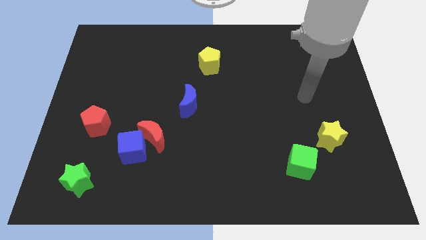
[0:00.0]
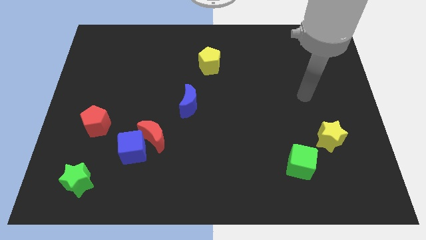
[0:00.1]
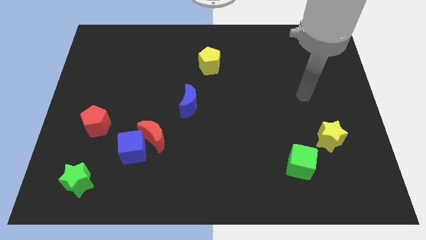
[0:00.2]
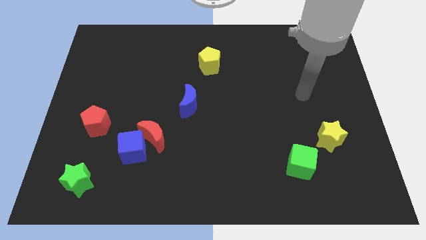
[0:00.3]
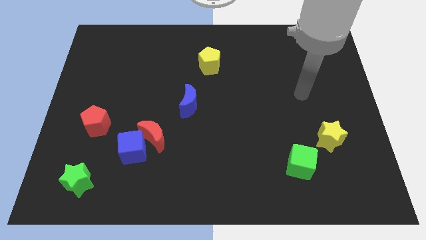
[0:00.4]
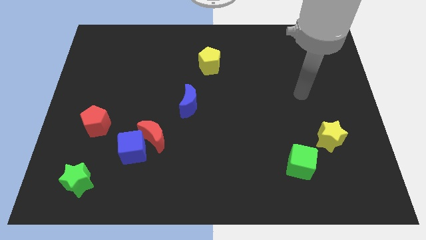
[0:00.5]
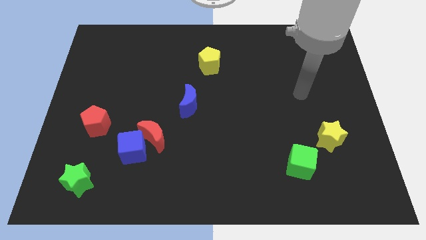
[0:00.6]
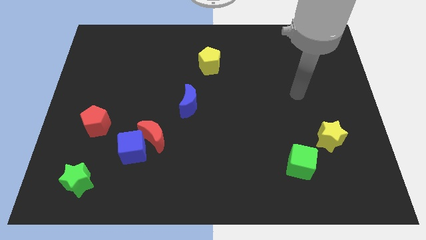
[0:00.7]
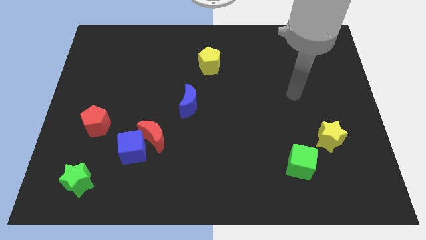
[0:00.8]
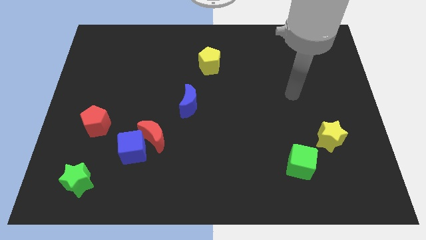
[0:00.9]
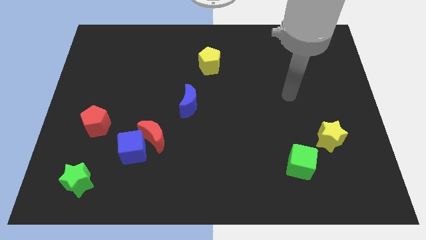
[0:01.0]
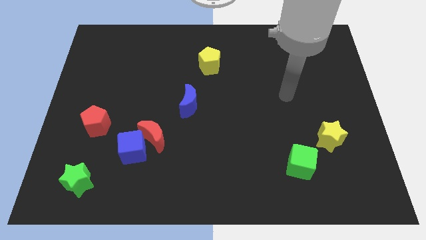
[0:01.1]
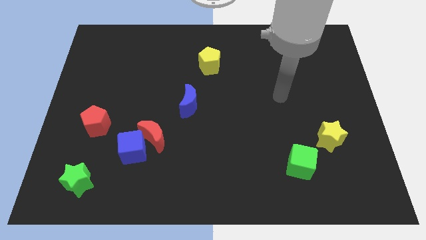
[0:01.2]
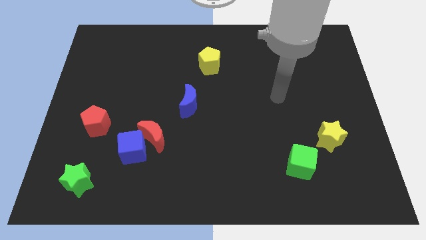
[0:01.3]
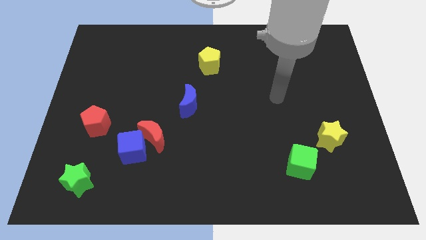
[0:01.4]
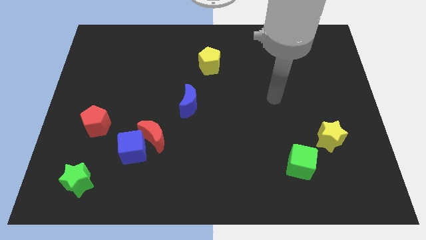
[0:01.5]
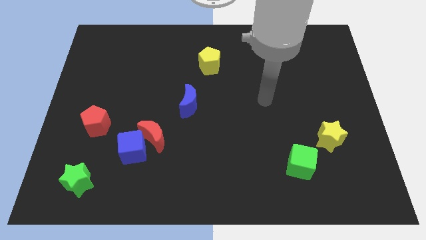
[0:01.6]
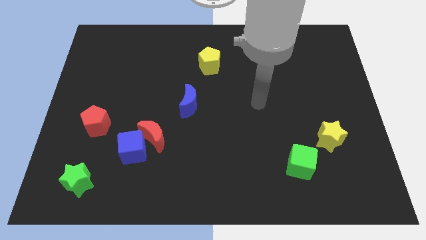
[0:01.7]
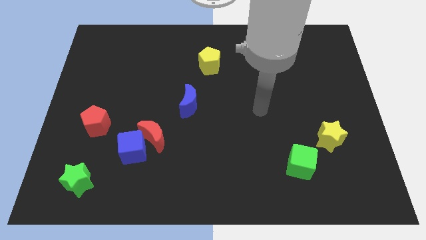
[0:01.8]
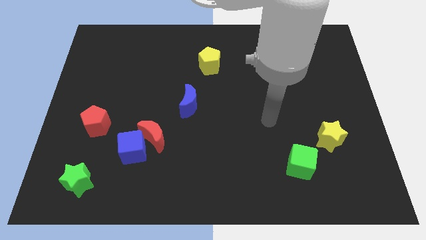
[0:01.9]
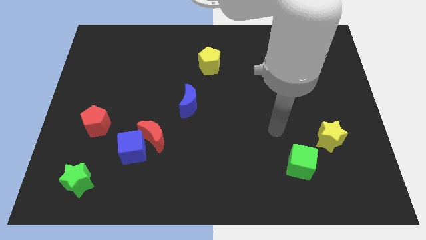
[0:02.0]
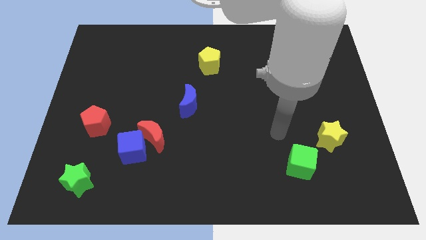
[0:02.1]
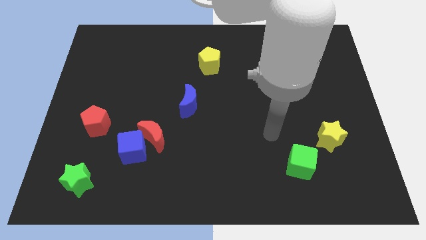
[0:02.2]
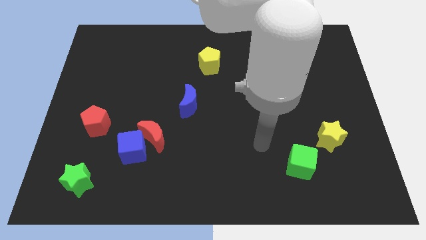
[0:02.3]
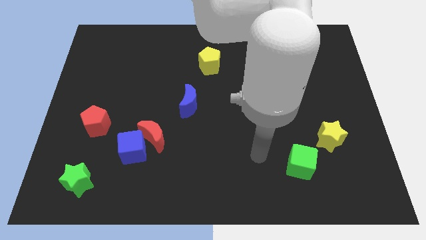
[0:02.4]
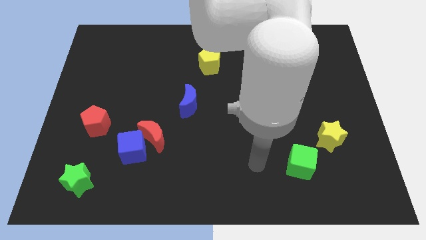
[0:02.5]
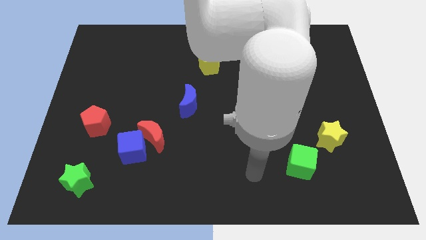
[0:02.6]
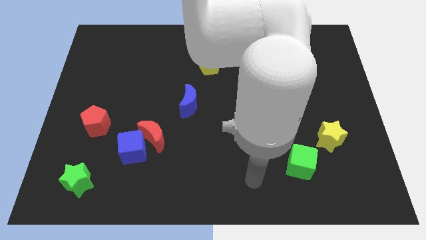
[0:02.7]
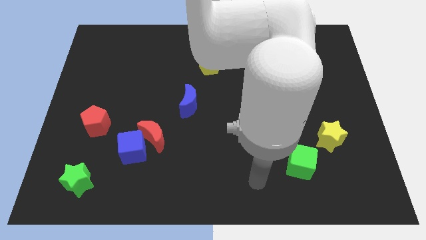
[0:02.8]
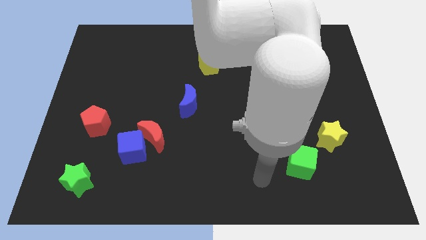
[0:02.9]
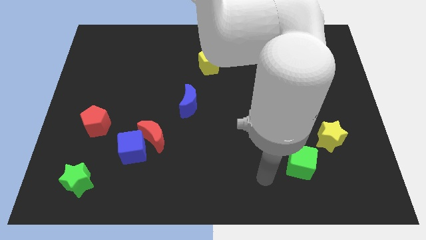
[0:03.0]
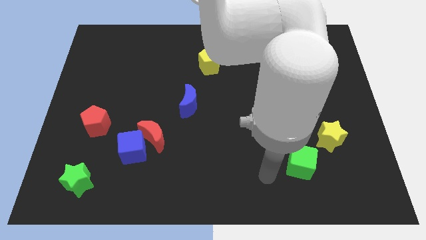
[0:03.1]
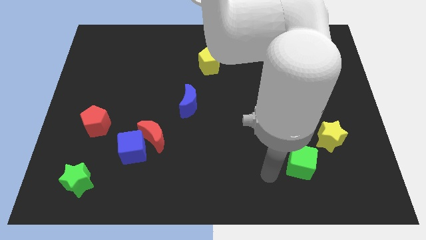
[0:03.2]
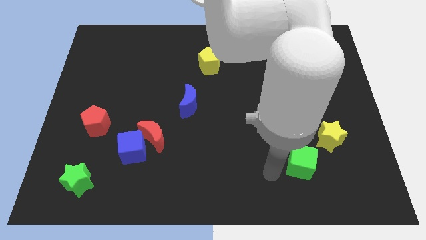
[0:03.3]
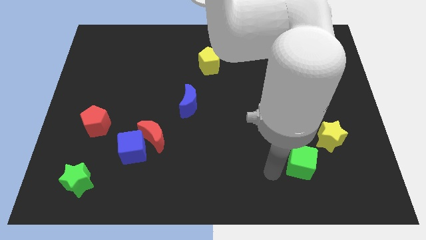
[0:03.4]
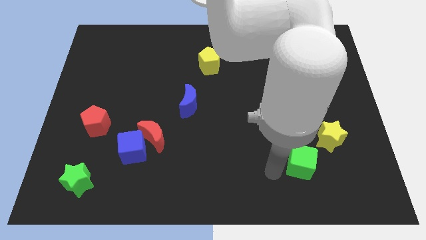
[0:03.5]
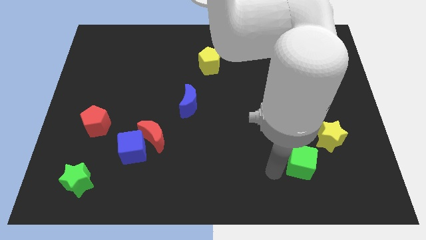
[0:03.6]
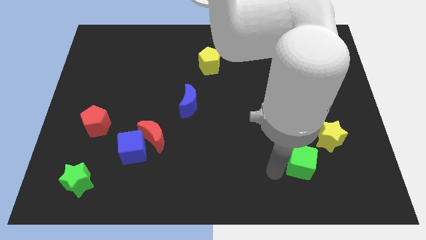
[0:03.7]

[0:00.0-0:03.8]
move close to the left side of the green cube

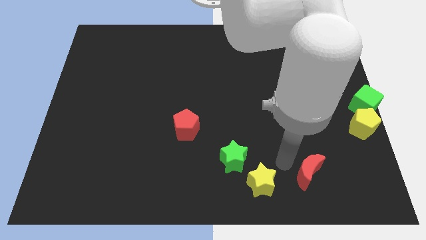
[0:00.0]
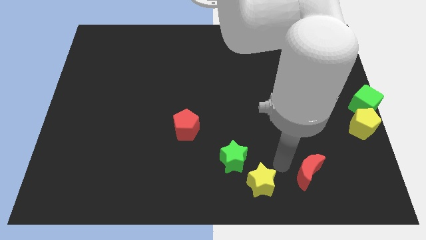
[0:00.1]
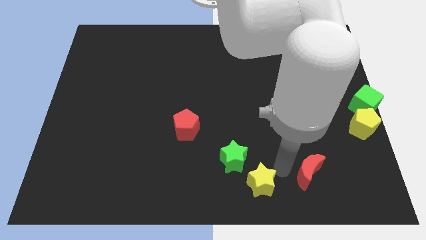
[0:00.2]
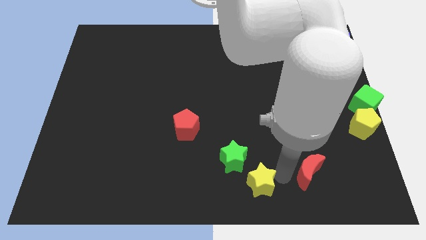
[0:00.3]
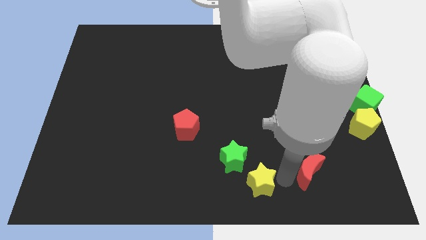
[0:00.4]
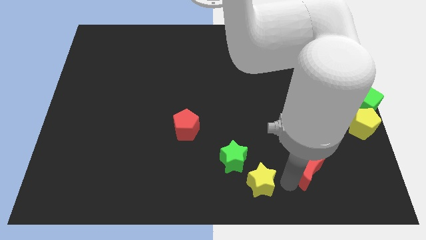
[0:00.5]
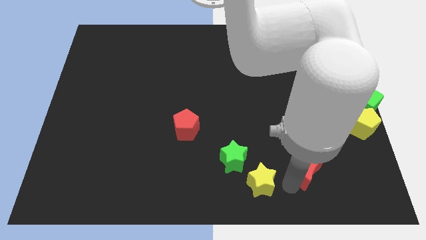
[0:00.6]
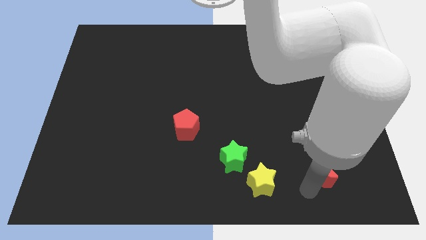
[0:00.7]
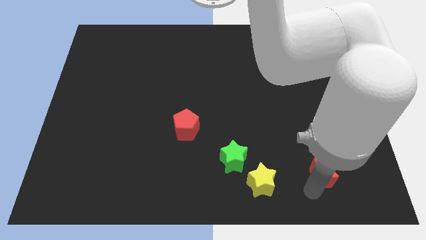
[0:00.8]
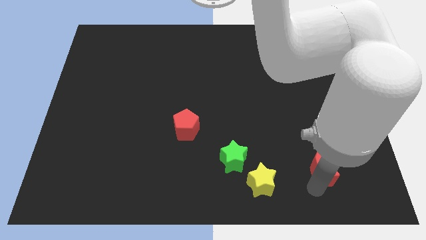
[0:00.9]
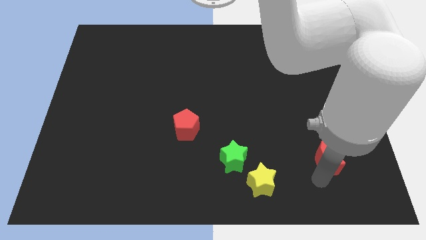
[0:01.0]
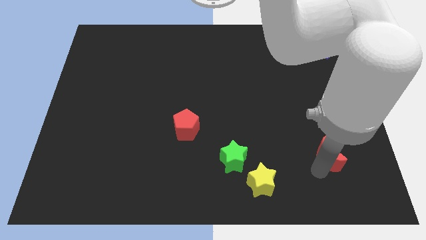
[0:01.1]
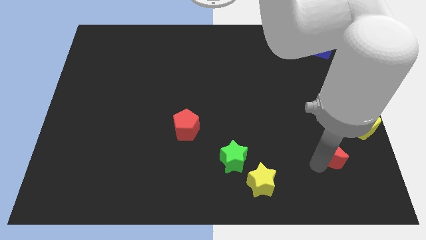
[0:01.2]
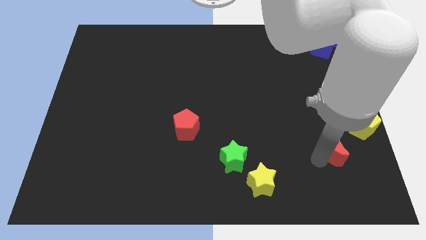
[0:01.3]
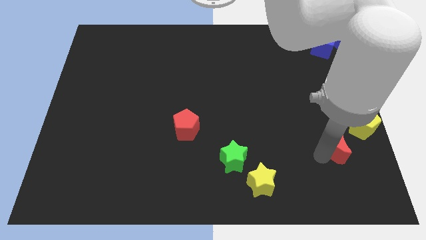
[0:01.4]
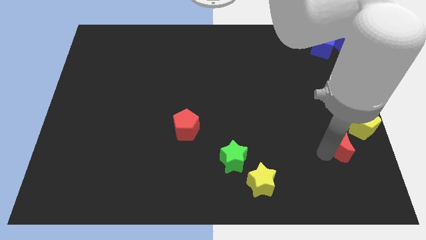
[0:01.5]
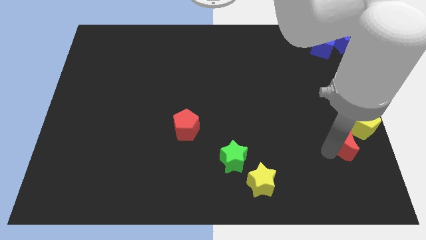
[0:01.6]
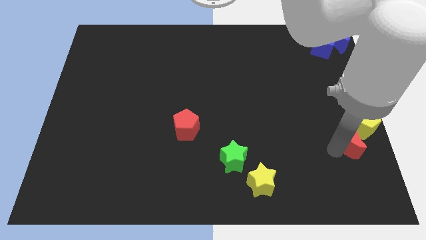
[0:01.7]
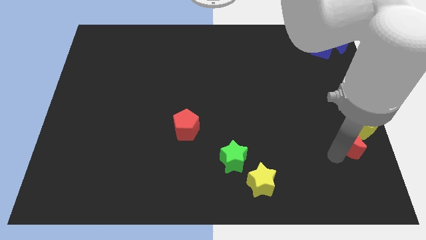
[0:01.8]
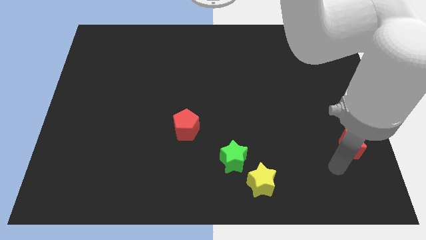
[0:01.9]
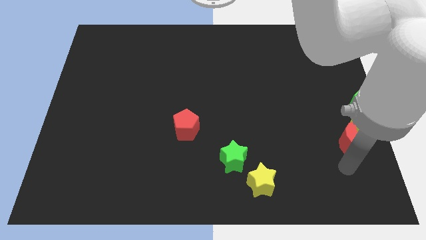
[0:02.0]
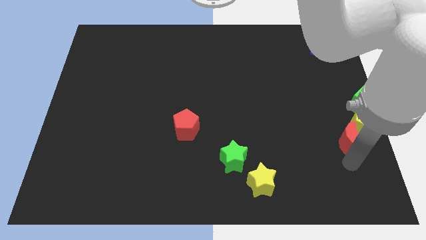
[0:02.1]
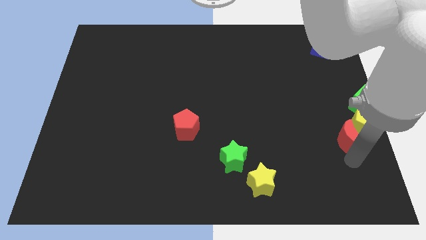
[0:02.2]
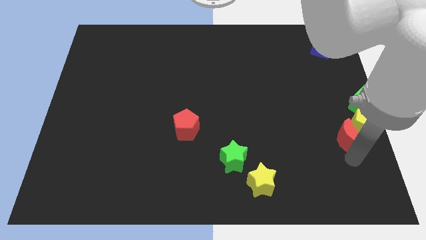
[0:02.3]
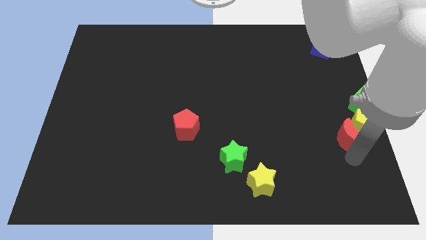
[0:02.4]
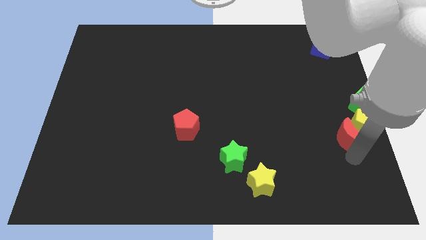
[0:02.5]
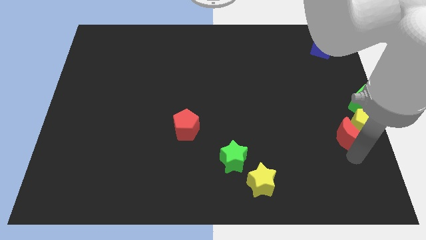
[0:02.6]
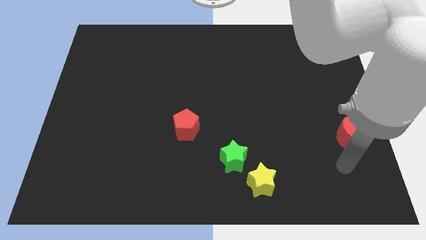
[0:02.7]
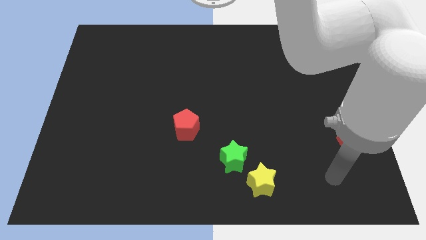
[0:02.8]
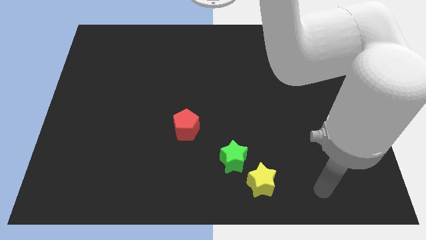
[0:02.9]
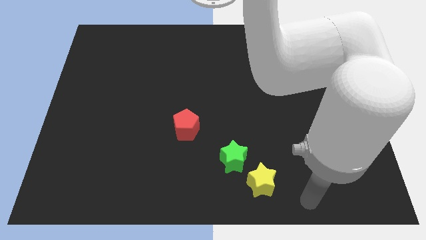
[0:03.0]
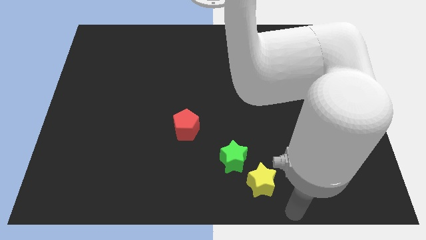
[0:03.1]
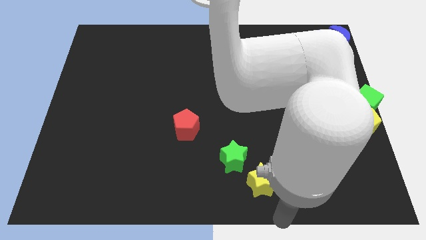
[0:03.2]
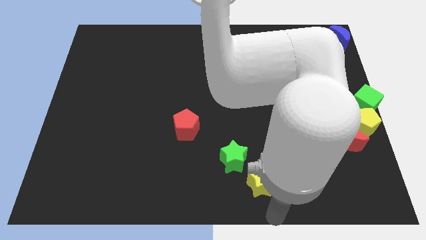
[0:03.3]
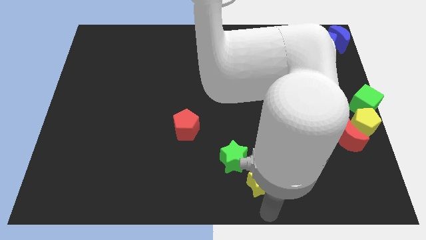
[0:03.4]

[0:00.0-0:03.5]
push the red crescent into the yellow pentagon

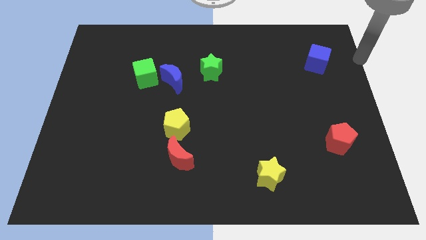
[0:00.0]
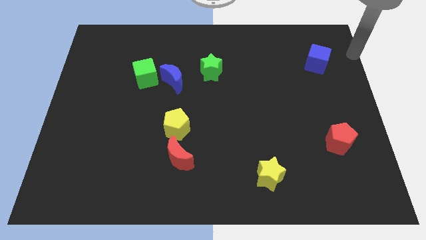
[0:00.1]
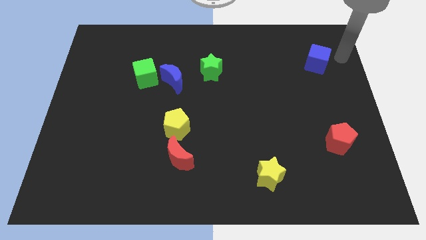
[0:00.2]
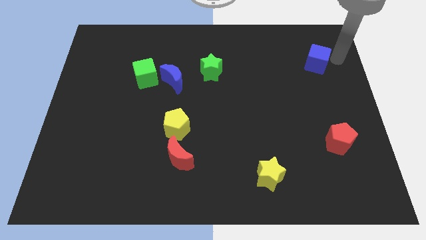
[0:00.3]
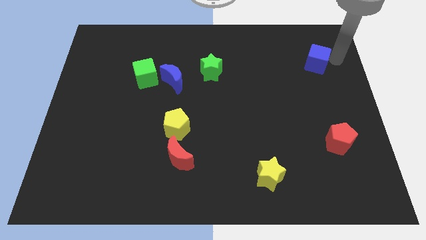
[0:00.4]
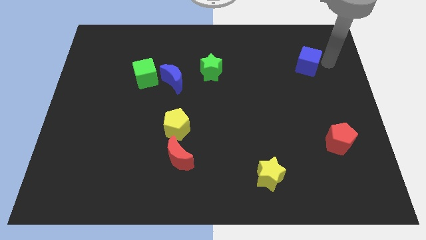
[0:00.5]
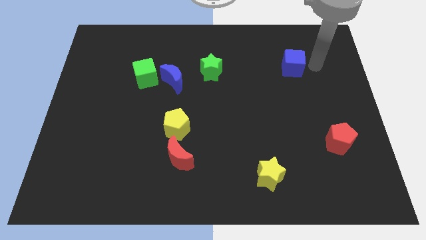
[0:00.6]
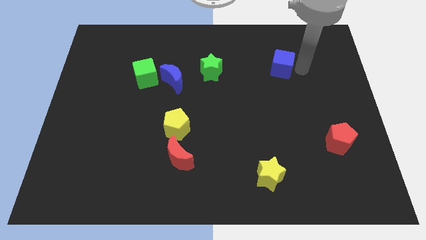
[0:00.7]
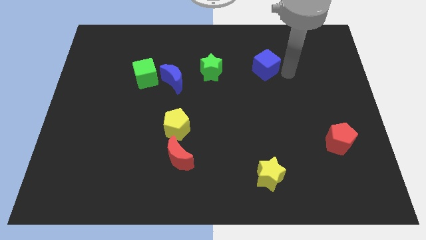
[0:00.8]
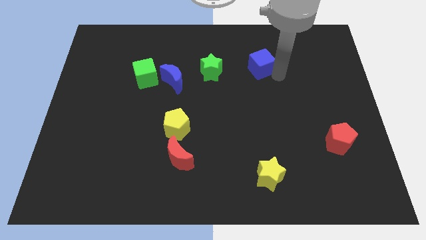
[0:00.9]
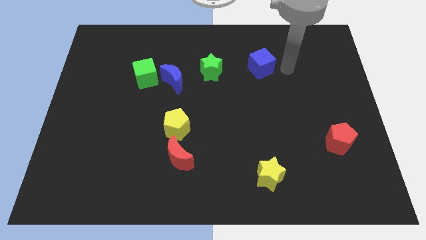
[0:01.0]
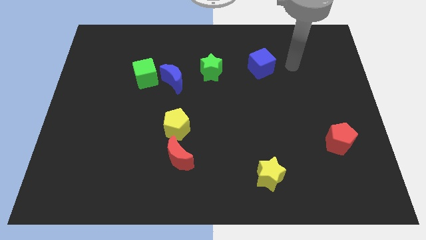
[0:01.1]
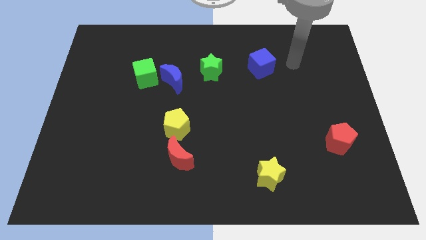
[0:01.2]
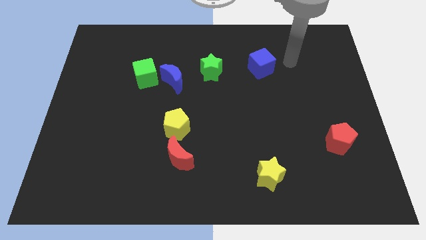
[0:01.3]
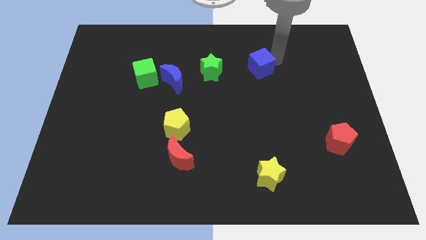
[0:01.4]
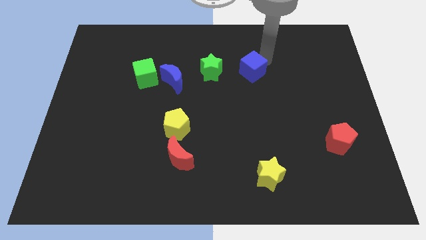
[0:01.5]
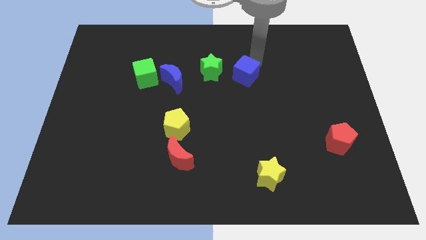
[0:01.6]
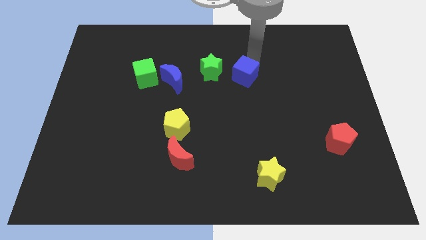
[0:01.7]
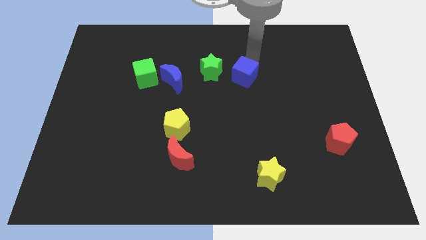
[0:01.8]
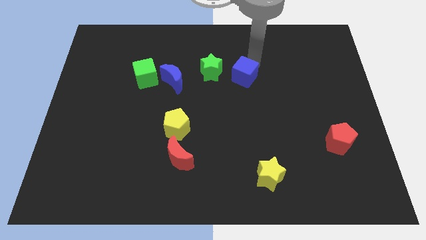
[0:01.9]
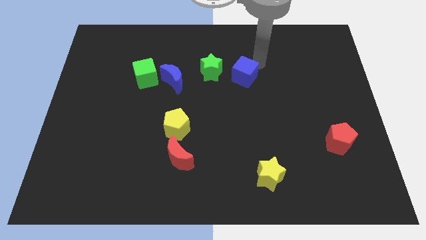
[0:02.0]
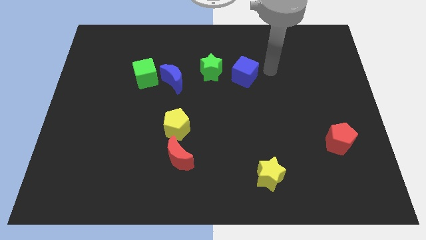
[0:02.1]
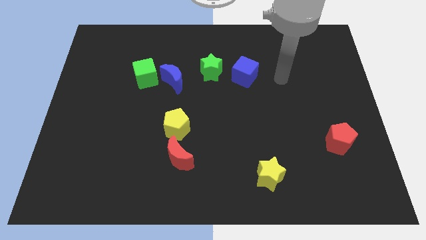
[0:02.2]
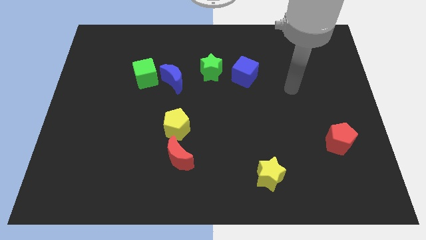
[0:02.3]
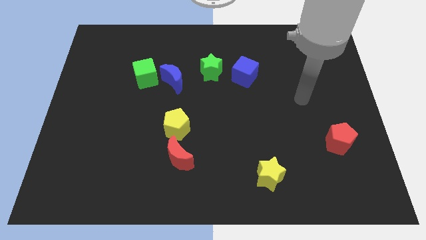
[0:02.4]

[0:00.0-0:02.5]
moved the blue block middle of the board
